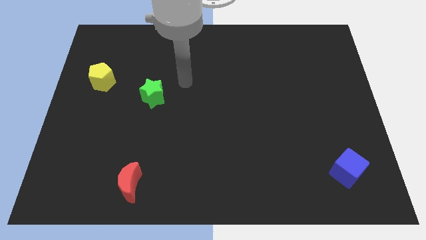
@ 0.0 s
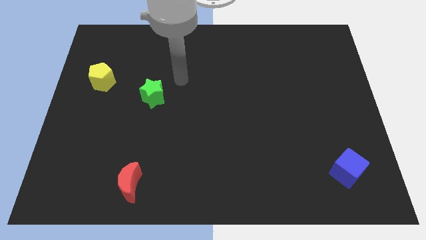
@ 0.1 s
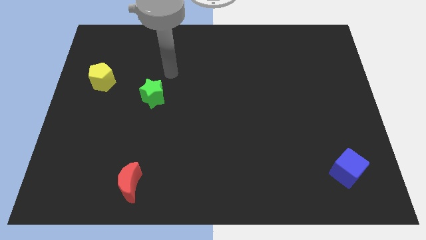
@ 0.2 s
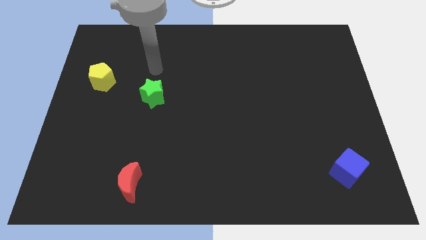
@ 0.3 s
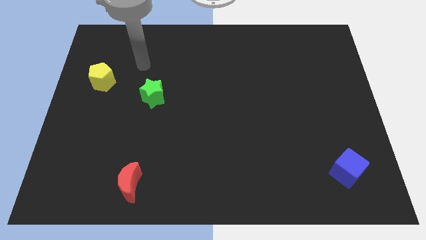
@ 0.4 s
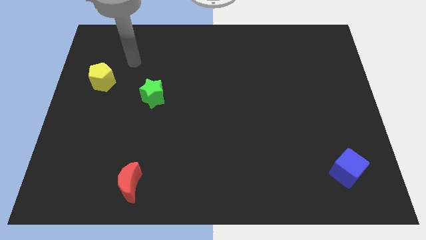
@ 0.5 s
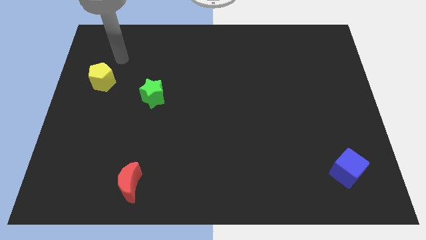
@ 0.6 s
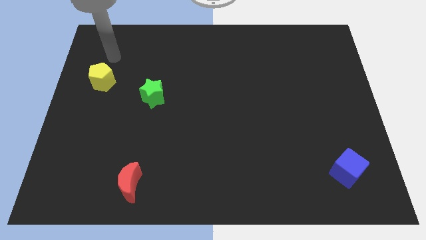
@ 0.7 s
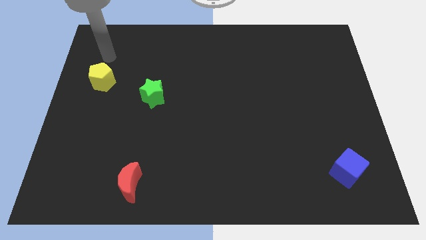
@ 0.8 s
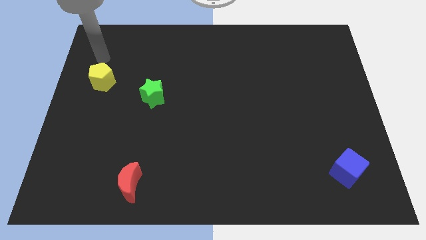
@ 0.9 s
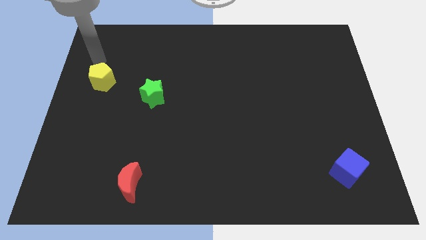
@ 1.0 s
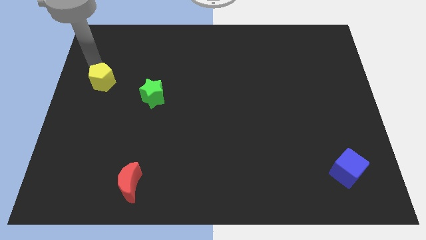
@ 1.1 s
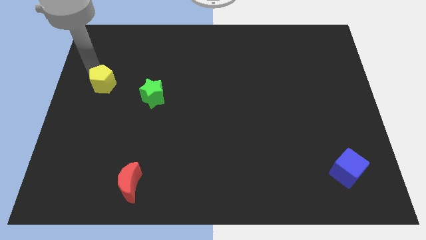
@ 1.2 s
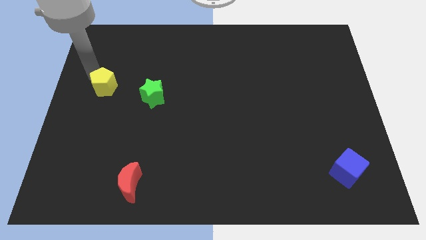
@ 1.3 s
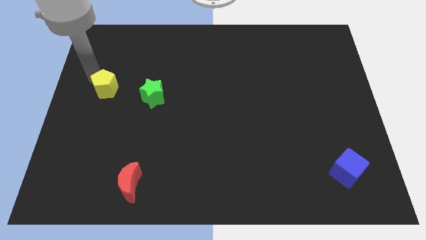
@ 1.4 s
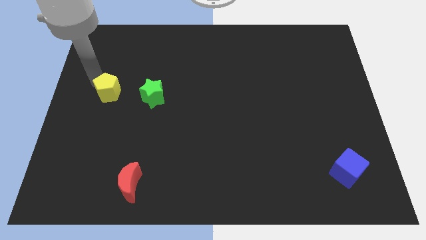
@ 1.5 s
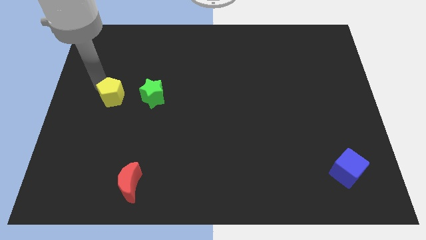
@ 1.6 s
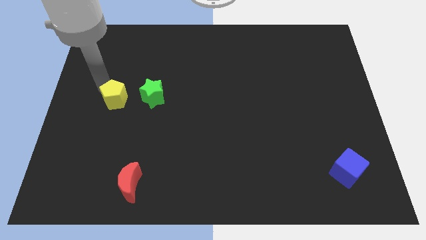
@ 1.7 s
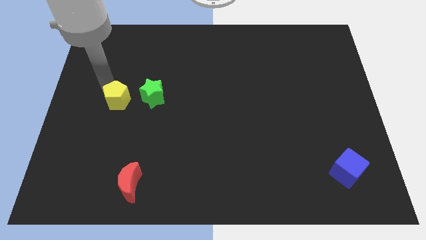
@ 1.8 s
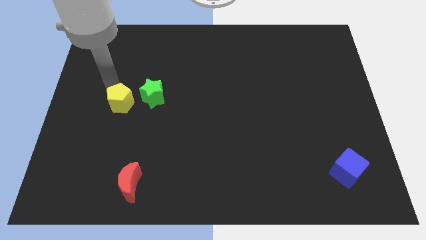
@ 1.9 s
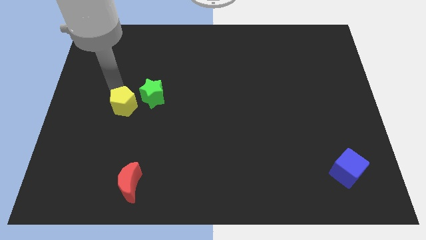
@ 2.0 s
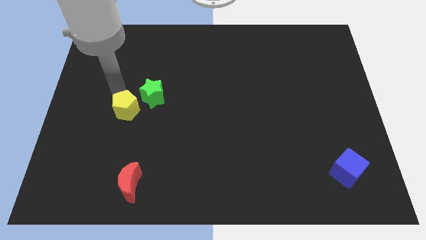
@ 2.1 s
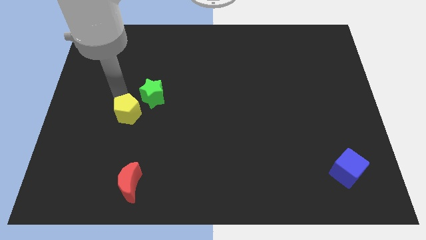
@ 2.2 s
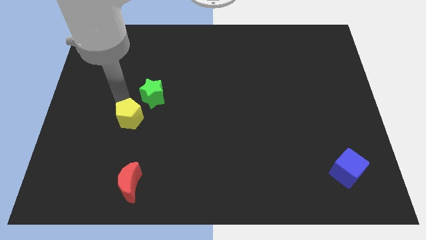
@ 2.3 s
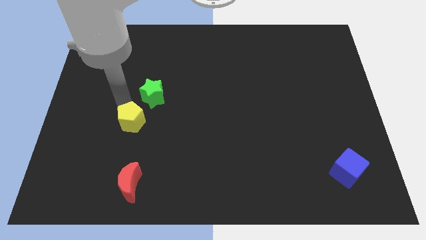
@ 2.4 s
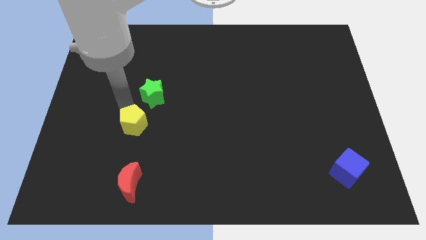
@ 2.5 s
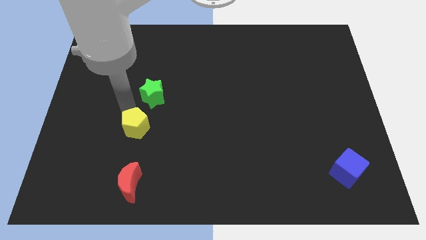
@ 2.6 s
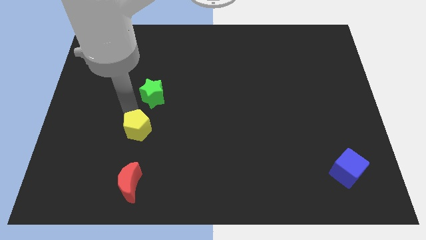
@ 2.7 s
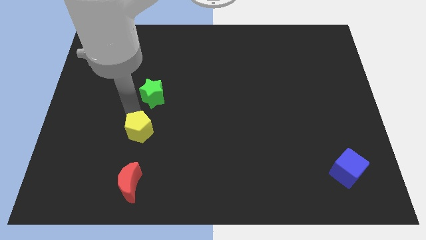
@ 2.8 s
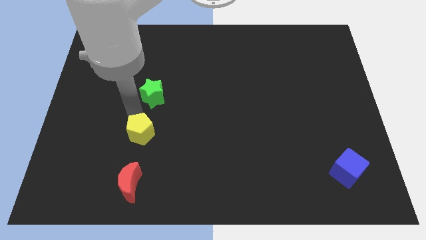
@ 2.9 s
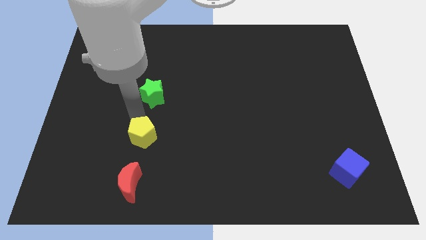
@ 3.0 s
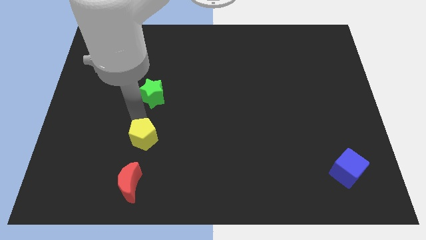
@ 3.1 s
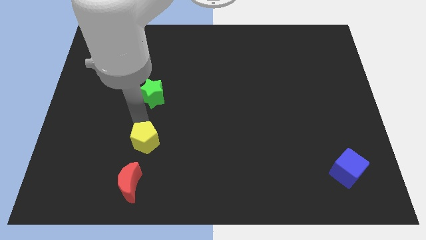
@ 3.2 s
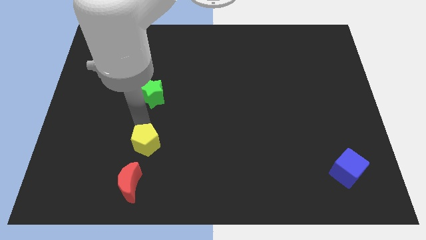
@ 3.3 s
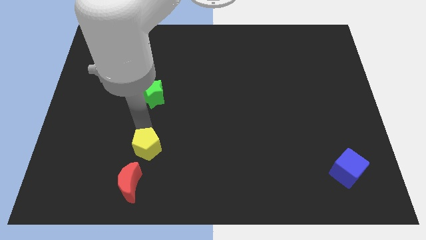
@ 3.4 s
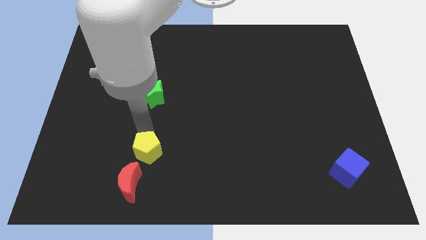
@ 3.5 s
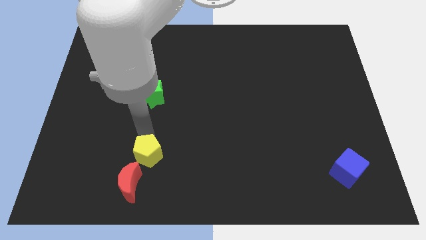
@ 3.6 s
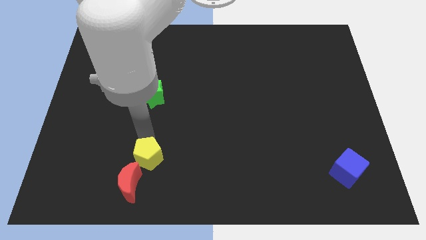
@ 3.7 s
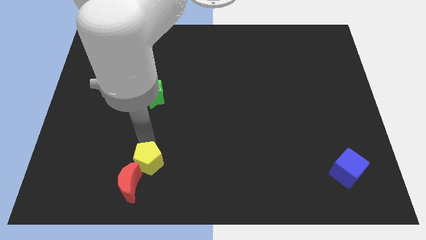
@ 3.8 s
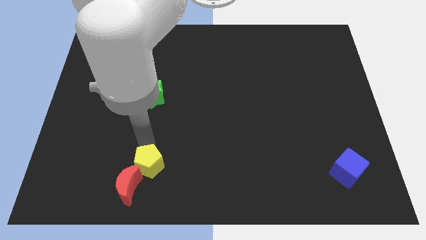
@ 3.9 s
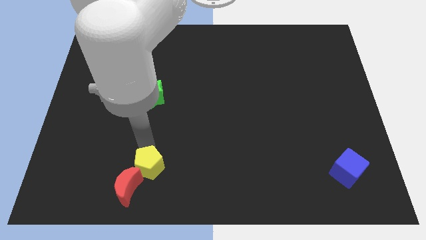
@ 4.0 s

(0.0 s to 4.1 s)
put the yellow pentagon to the red moon

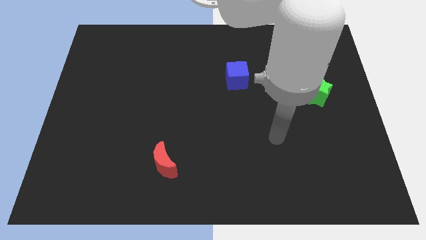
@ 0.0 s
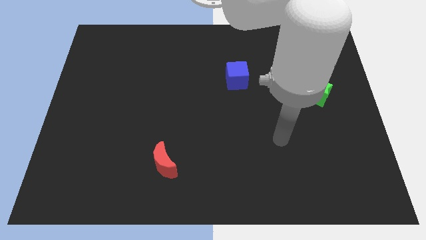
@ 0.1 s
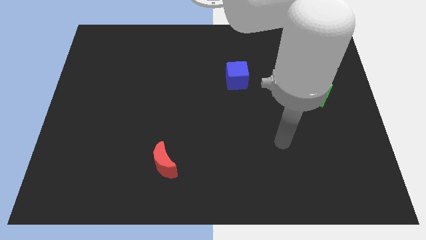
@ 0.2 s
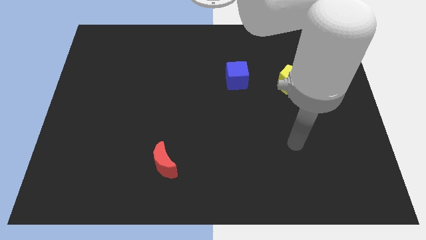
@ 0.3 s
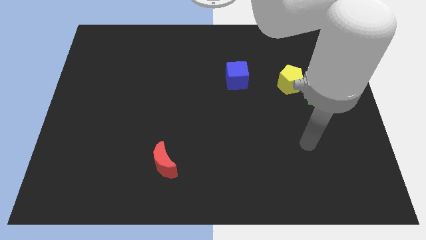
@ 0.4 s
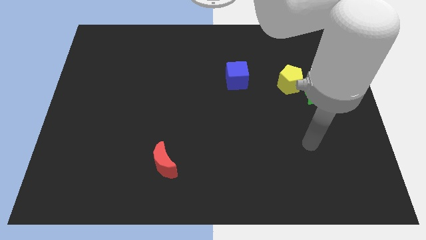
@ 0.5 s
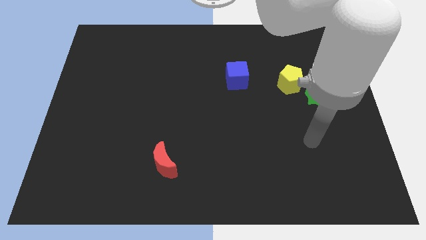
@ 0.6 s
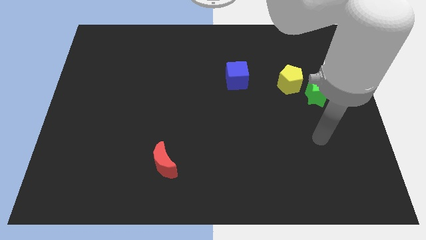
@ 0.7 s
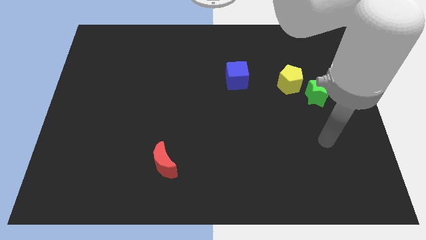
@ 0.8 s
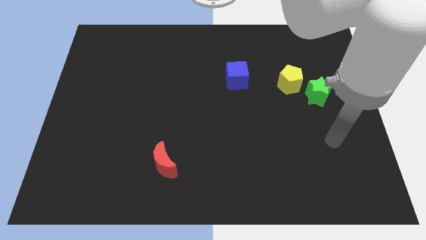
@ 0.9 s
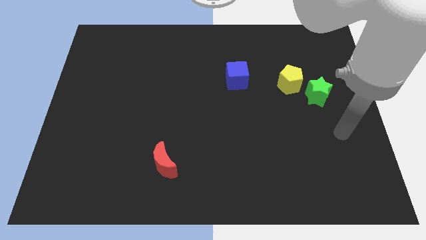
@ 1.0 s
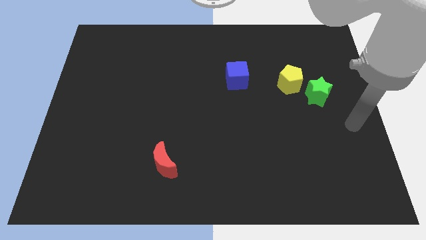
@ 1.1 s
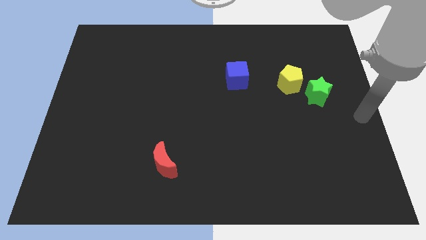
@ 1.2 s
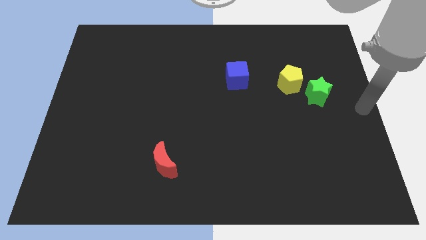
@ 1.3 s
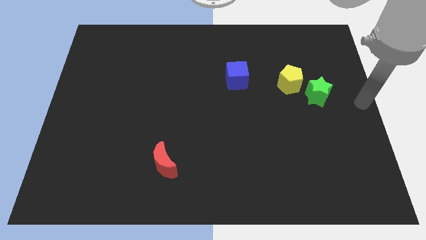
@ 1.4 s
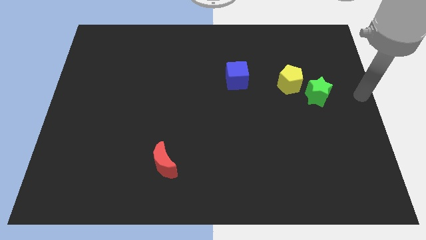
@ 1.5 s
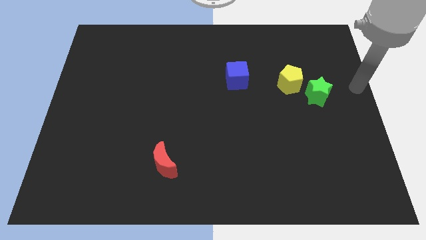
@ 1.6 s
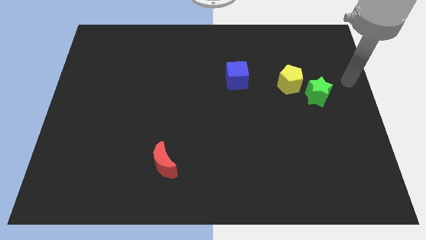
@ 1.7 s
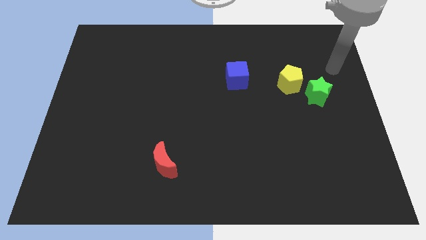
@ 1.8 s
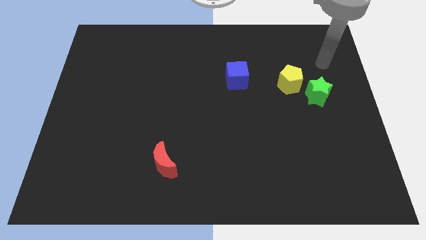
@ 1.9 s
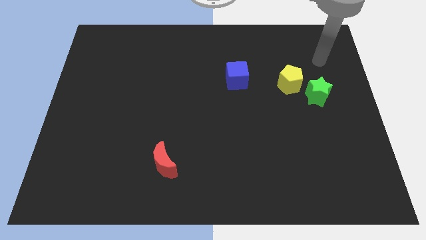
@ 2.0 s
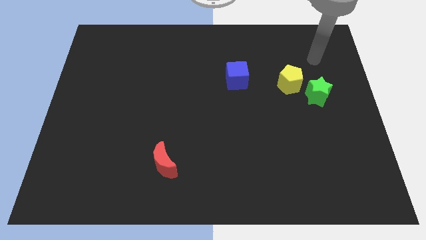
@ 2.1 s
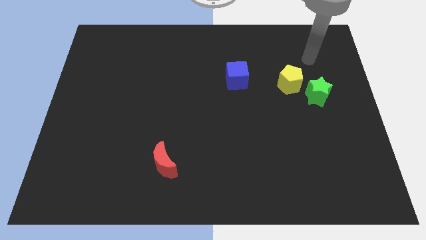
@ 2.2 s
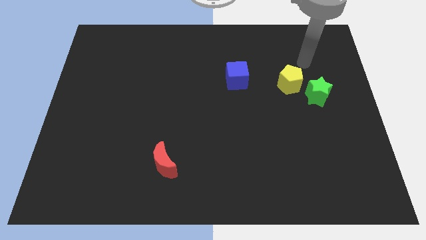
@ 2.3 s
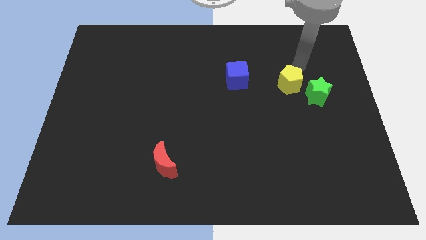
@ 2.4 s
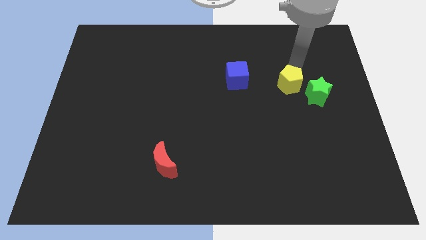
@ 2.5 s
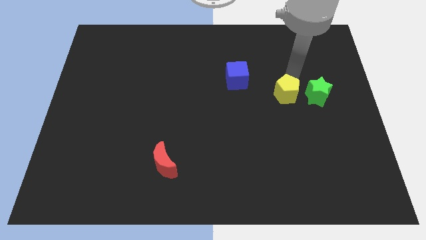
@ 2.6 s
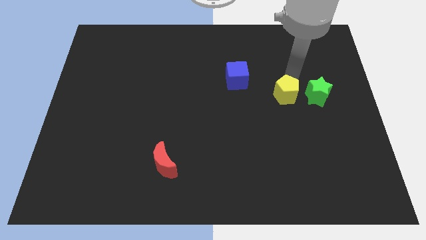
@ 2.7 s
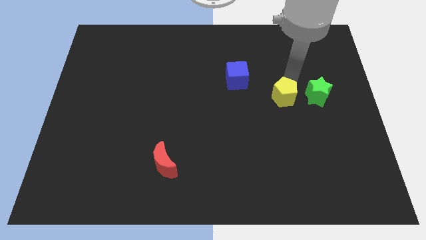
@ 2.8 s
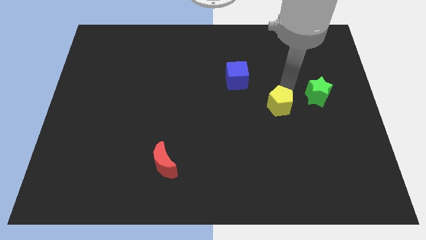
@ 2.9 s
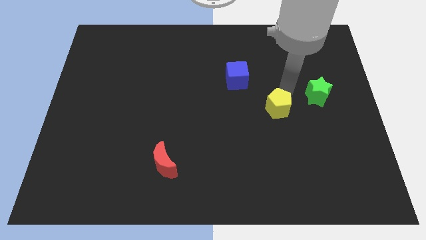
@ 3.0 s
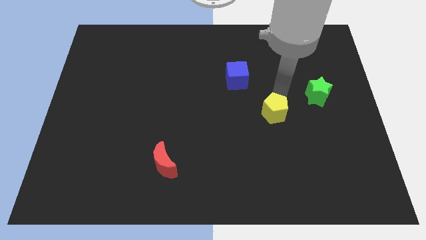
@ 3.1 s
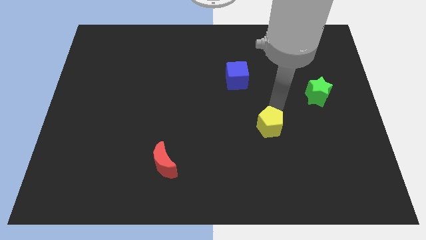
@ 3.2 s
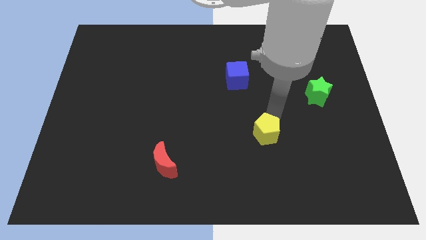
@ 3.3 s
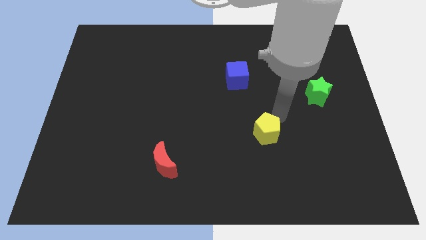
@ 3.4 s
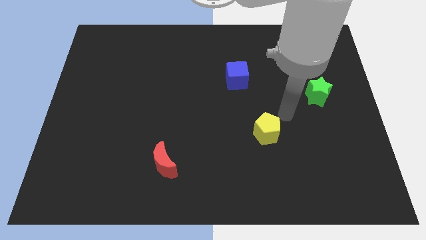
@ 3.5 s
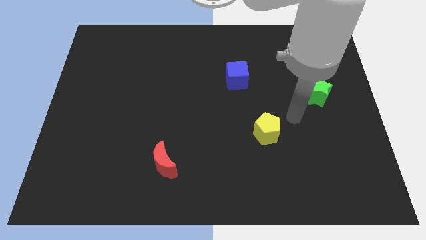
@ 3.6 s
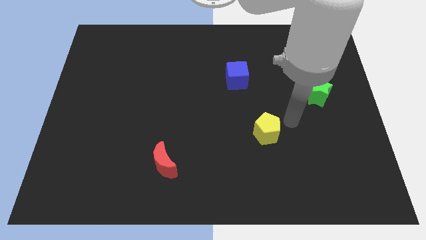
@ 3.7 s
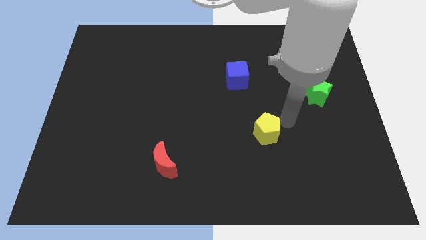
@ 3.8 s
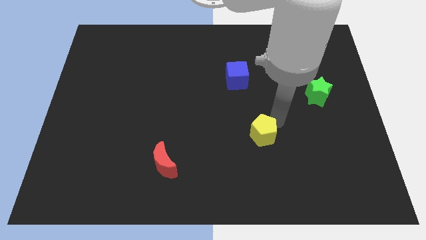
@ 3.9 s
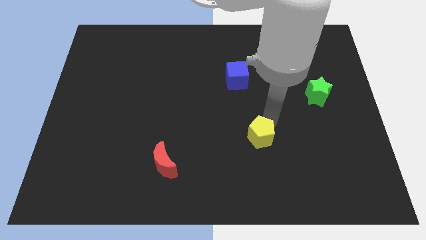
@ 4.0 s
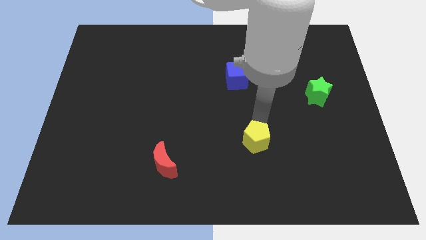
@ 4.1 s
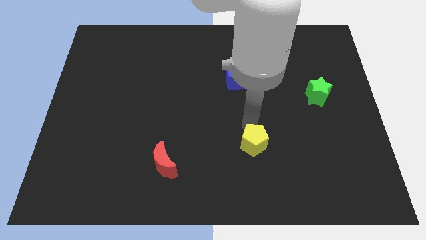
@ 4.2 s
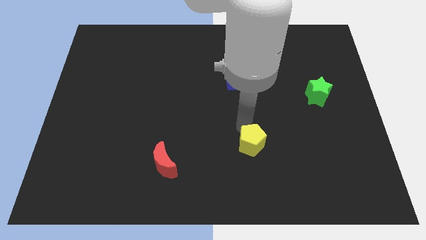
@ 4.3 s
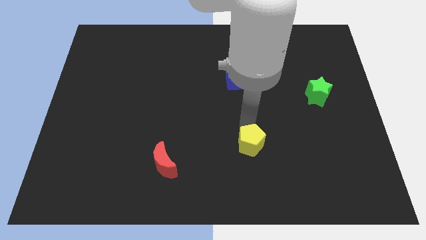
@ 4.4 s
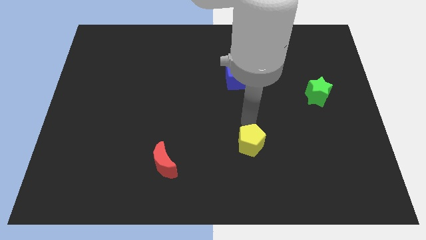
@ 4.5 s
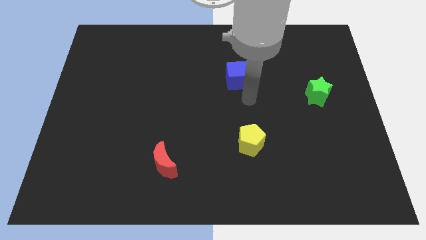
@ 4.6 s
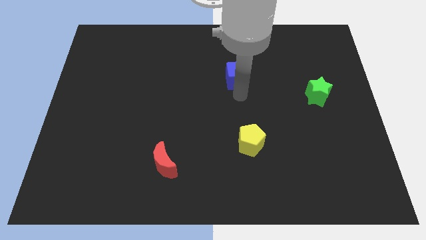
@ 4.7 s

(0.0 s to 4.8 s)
push the yellow pentagon towards the red moon
